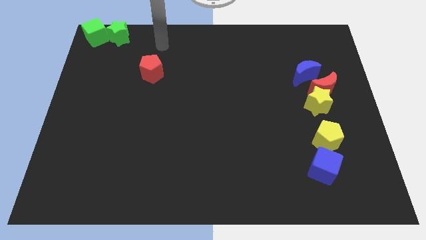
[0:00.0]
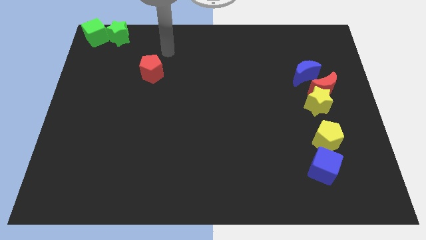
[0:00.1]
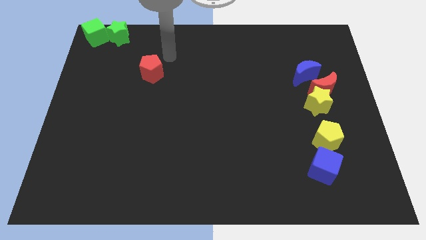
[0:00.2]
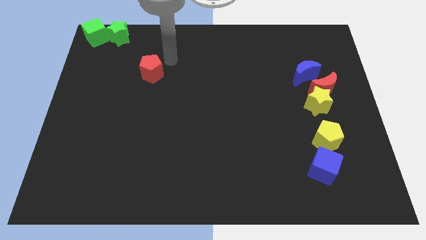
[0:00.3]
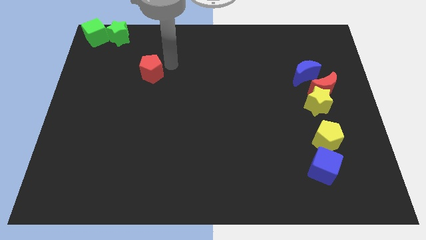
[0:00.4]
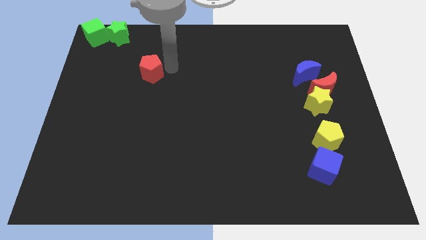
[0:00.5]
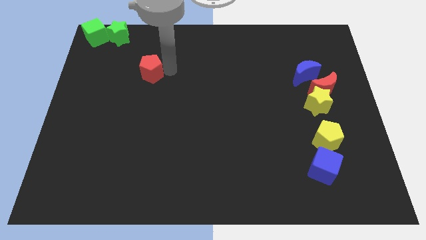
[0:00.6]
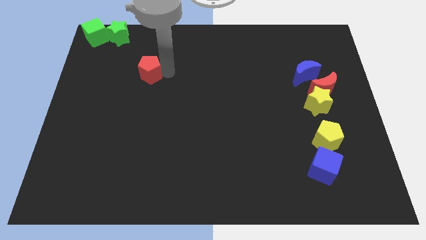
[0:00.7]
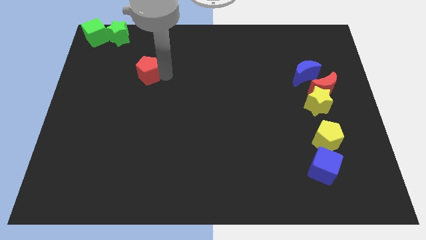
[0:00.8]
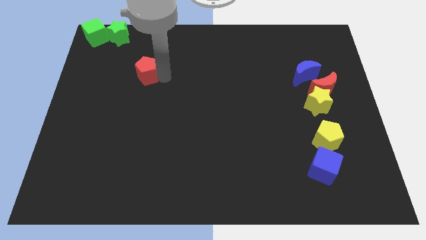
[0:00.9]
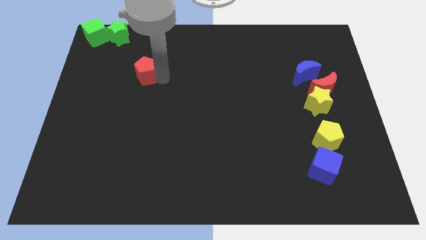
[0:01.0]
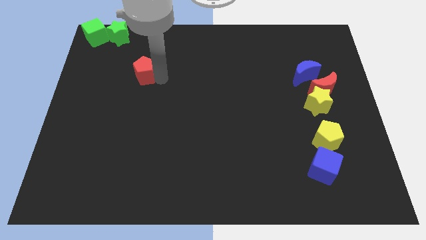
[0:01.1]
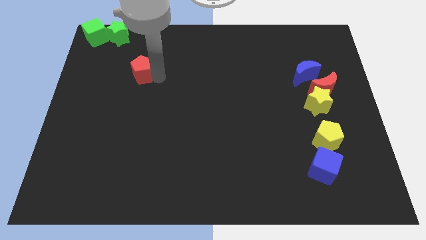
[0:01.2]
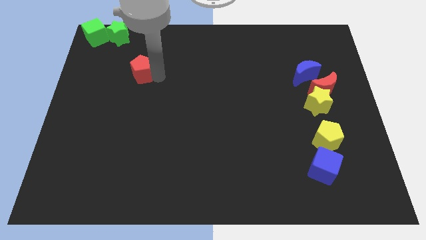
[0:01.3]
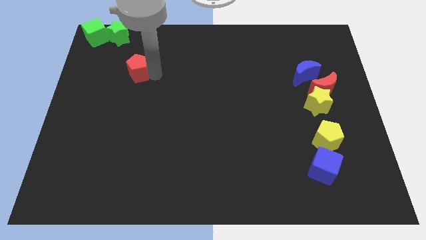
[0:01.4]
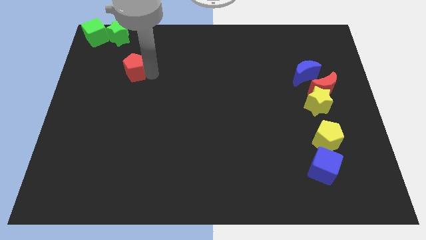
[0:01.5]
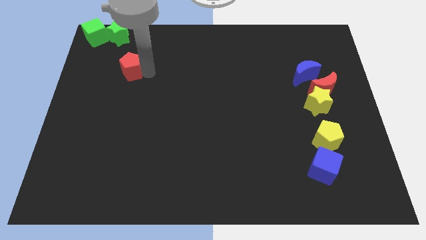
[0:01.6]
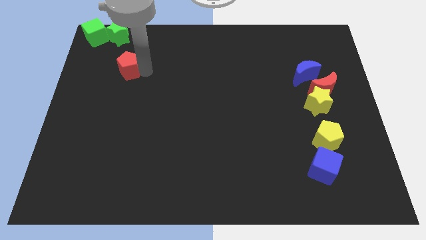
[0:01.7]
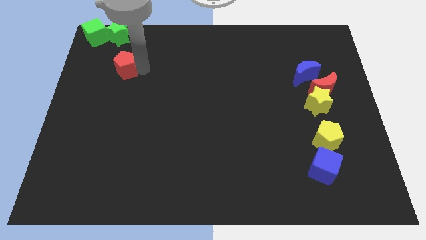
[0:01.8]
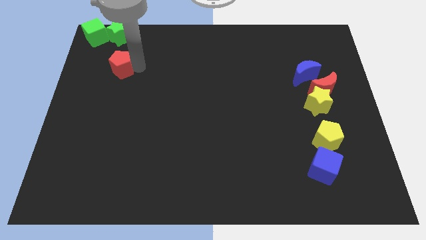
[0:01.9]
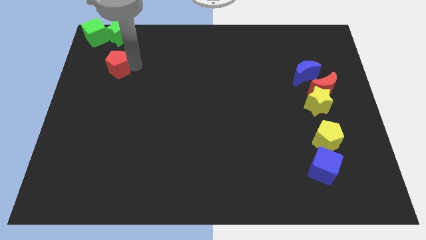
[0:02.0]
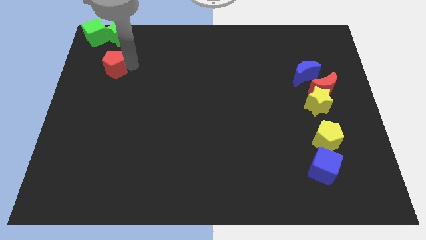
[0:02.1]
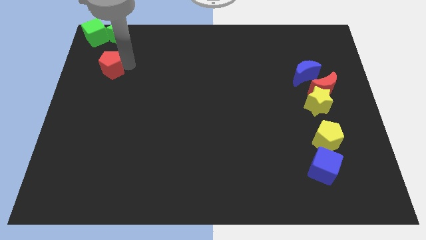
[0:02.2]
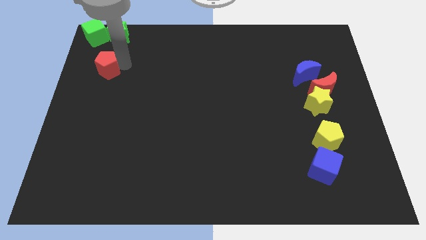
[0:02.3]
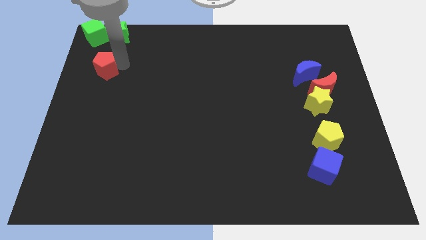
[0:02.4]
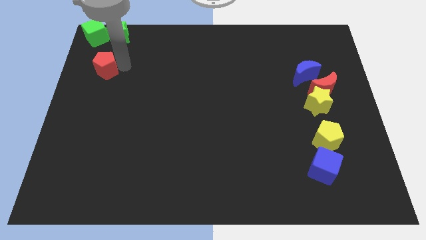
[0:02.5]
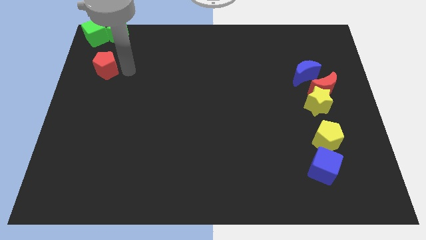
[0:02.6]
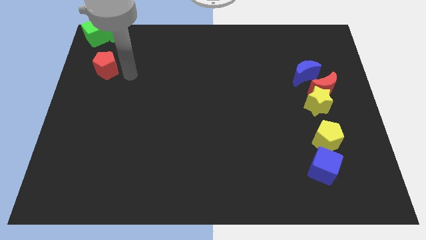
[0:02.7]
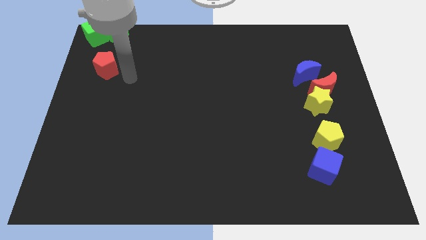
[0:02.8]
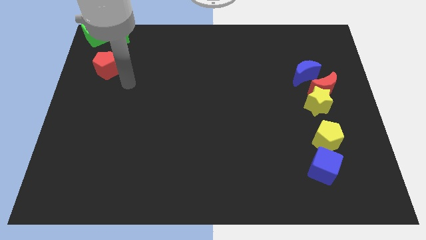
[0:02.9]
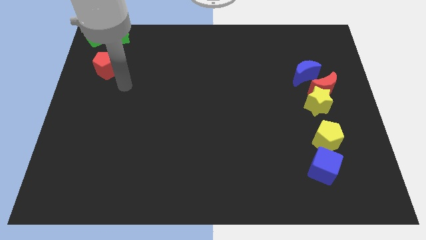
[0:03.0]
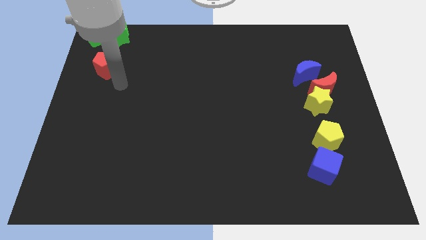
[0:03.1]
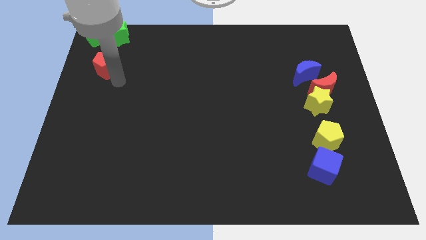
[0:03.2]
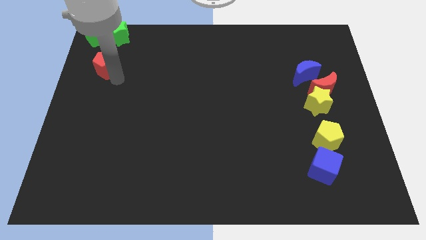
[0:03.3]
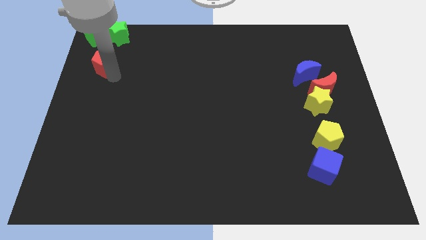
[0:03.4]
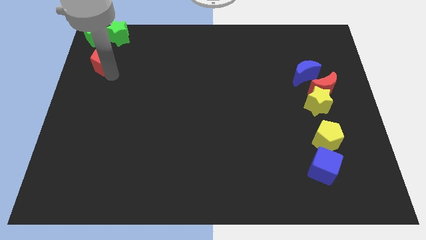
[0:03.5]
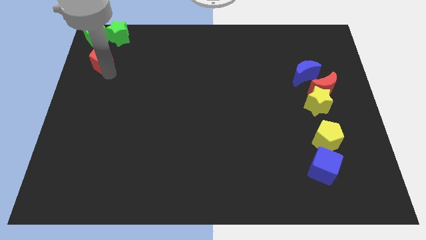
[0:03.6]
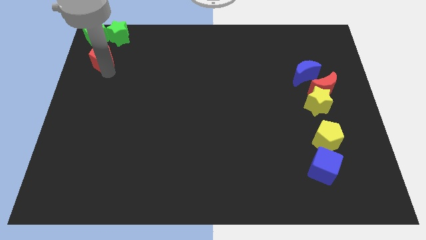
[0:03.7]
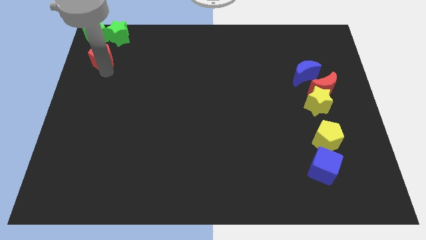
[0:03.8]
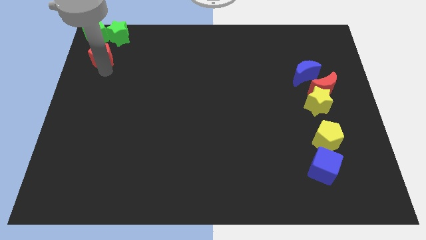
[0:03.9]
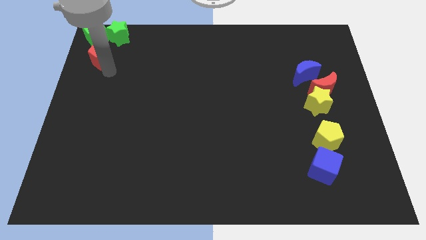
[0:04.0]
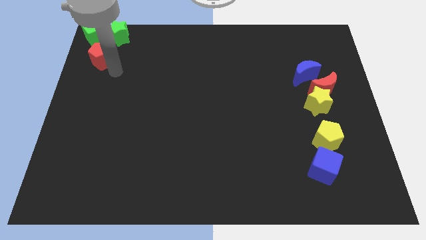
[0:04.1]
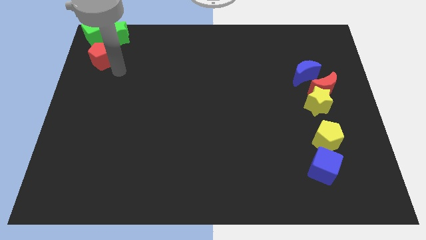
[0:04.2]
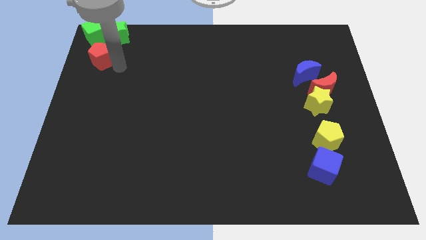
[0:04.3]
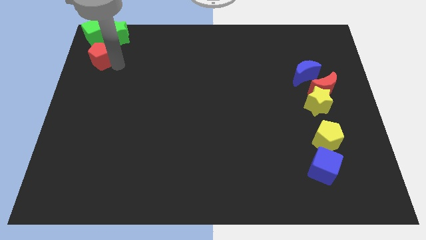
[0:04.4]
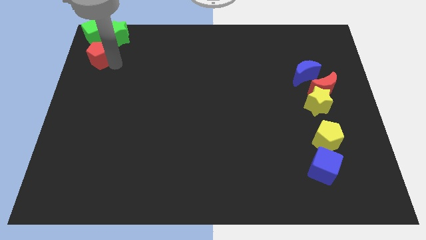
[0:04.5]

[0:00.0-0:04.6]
push the red pentagon to the bottom side of the green cube

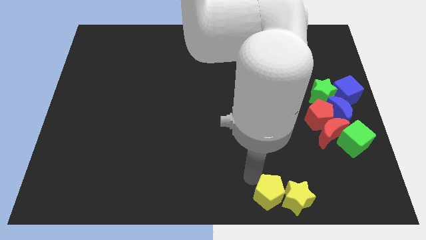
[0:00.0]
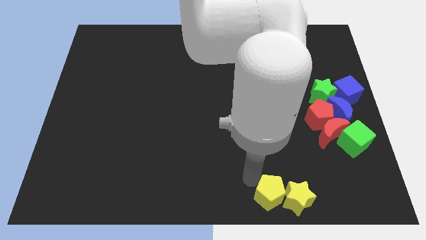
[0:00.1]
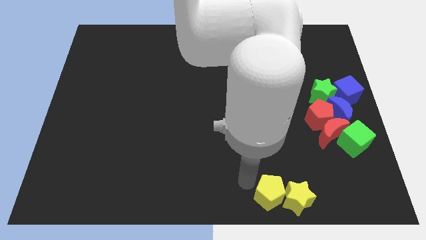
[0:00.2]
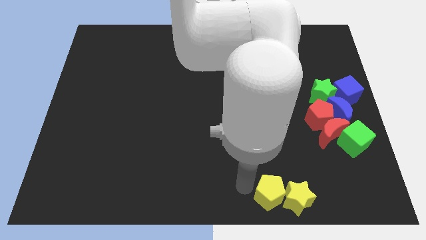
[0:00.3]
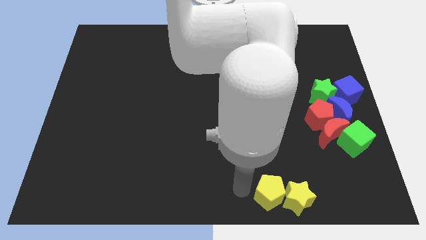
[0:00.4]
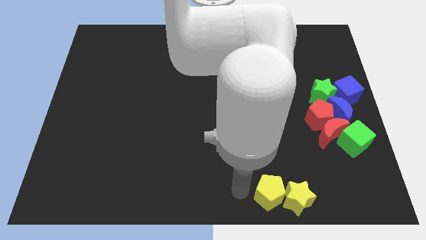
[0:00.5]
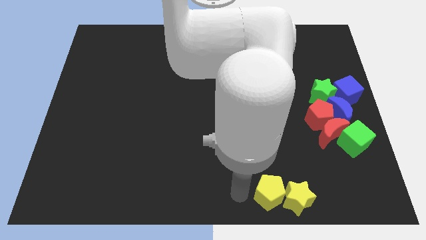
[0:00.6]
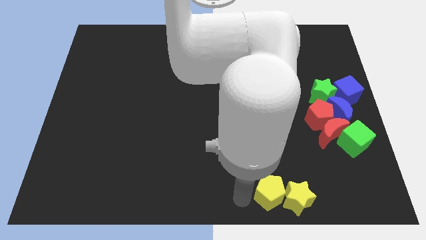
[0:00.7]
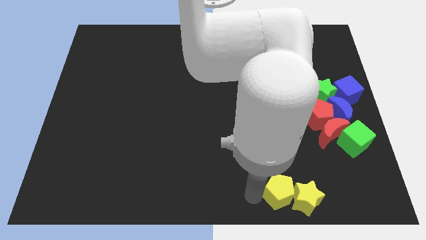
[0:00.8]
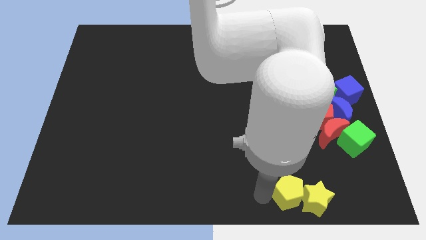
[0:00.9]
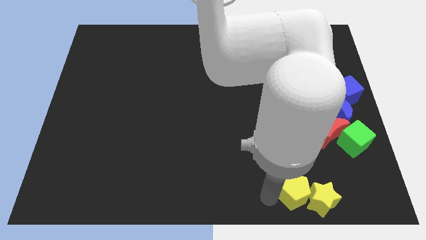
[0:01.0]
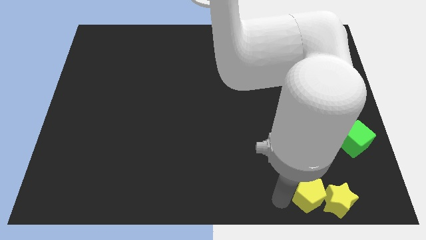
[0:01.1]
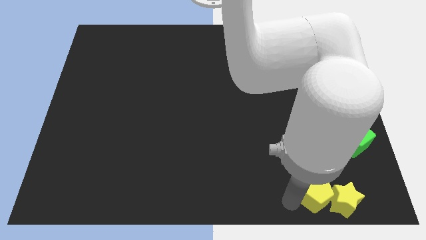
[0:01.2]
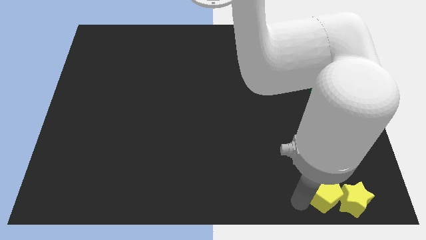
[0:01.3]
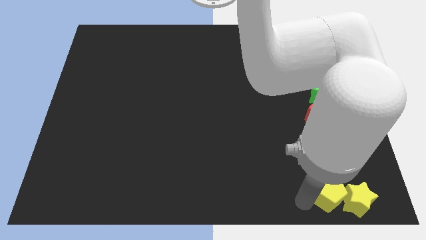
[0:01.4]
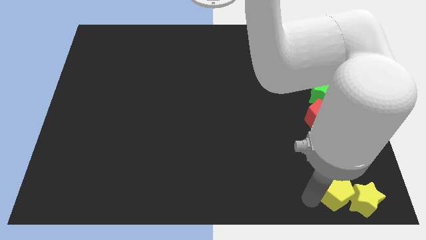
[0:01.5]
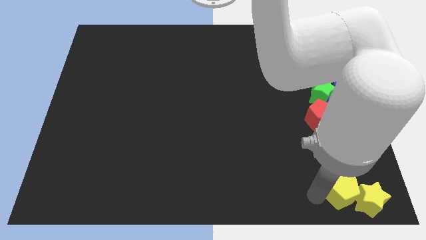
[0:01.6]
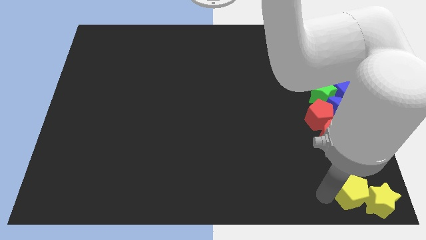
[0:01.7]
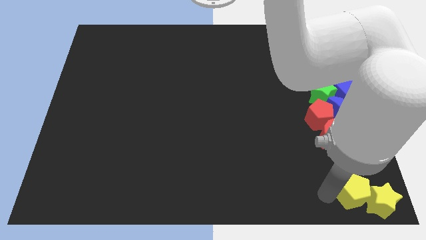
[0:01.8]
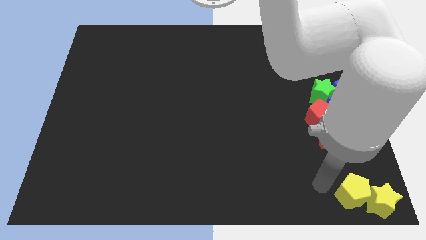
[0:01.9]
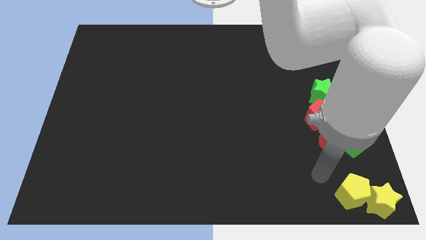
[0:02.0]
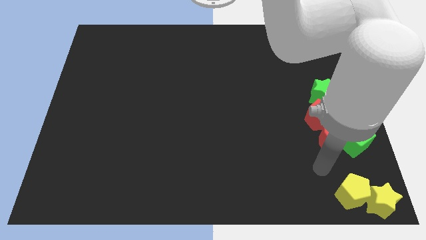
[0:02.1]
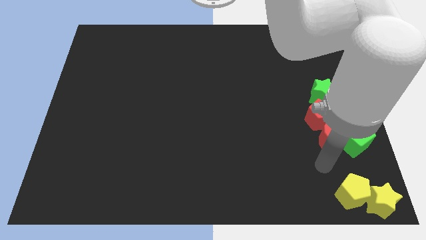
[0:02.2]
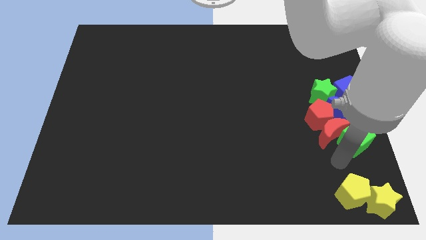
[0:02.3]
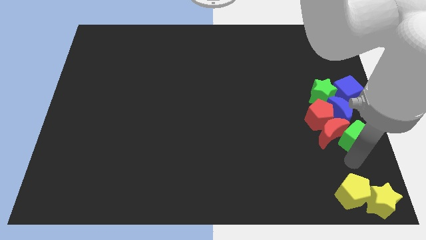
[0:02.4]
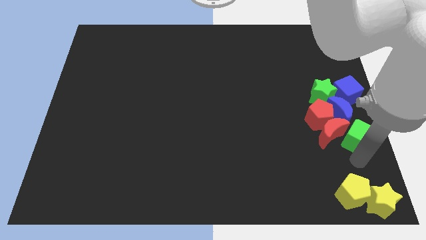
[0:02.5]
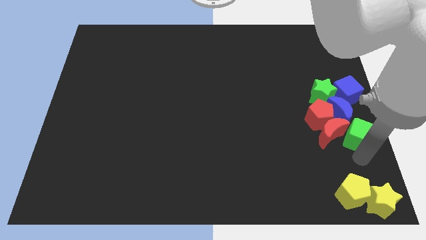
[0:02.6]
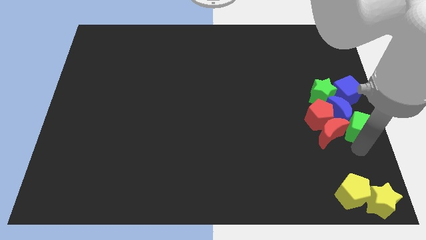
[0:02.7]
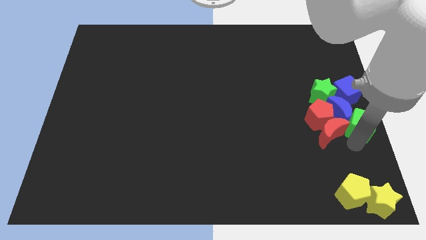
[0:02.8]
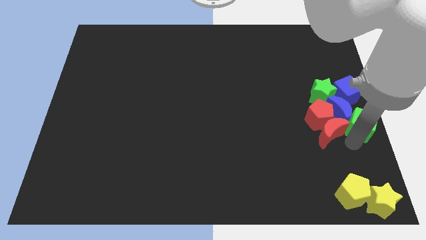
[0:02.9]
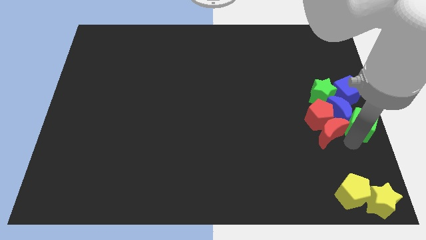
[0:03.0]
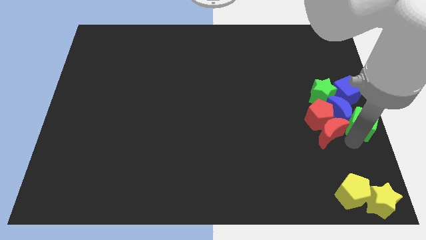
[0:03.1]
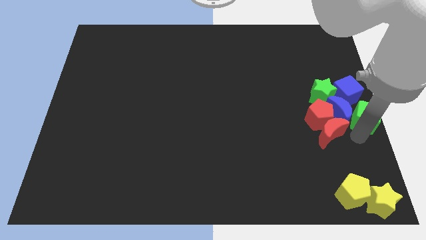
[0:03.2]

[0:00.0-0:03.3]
push the yellow blocks to the bottom right corner

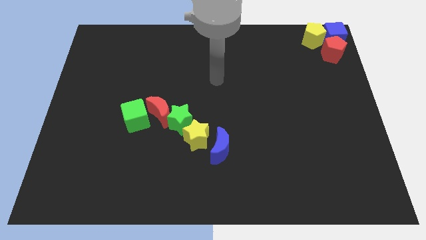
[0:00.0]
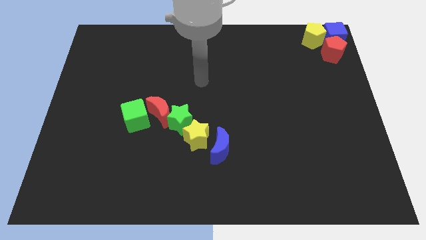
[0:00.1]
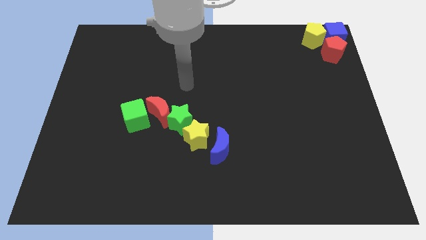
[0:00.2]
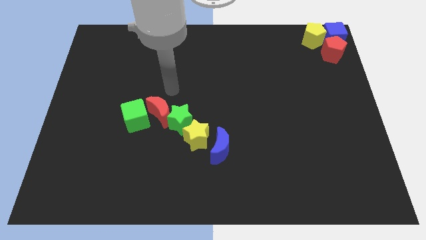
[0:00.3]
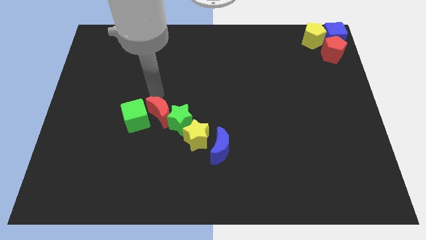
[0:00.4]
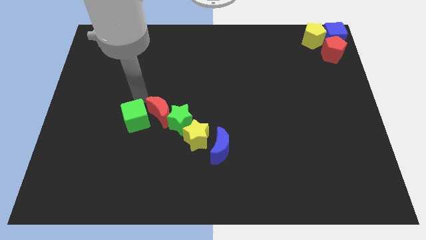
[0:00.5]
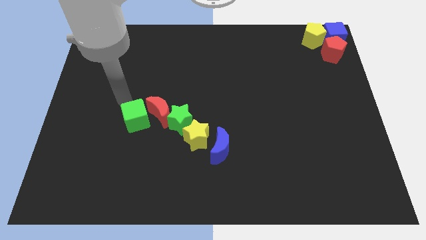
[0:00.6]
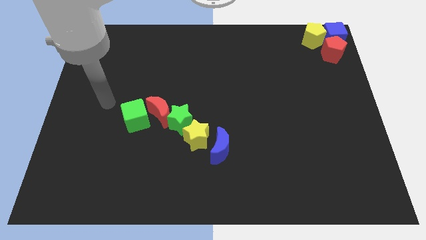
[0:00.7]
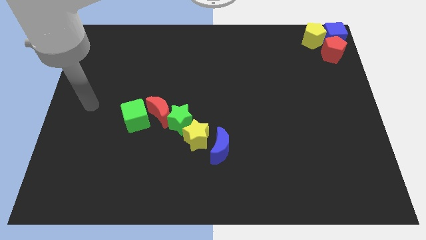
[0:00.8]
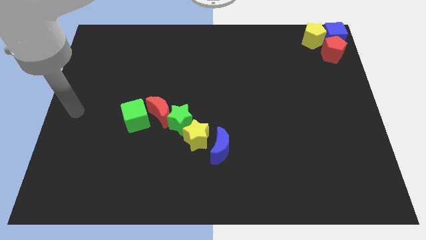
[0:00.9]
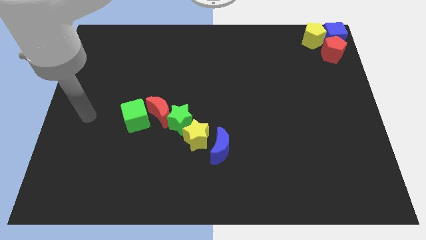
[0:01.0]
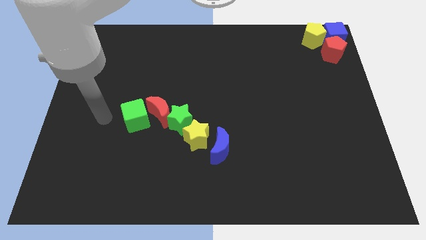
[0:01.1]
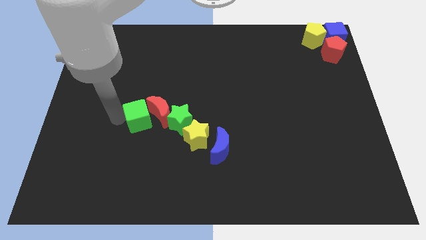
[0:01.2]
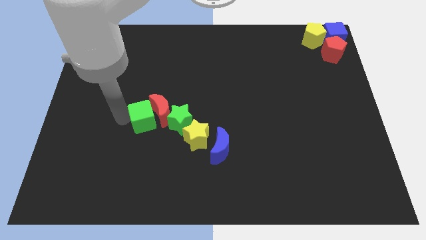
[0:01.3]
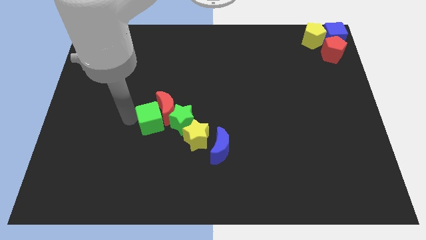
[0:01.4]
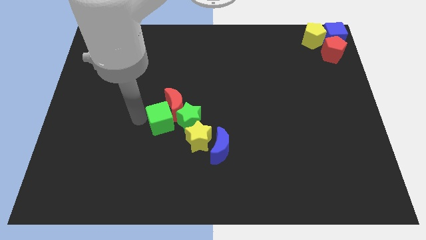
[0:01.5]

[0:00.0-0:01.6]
push the green cube into the group of blocks which are at the center of the board
